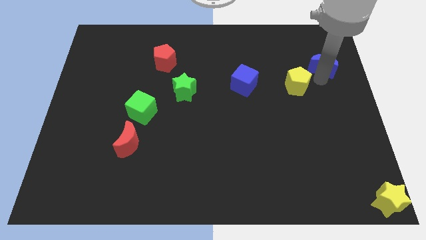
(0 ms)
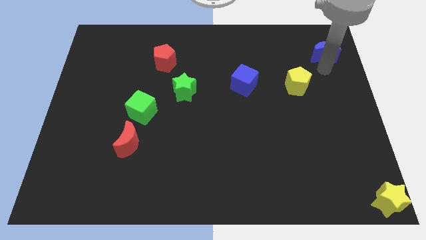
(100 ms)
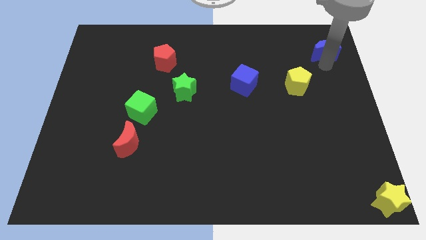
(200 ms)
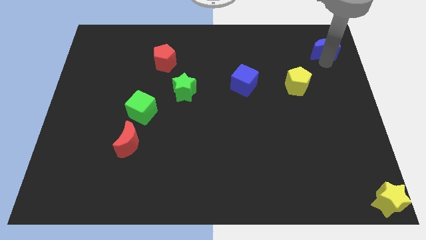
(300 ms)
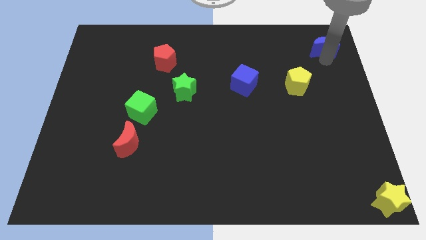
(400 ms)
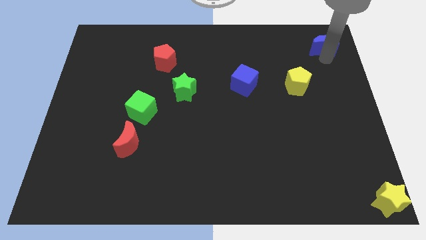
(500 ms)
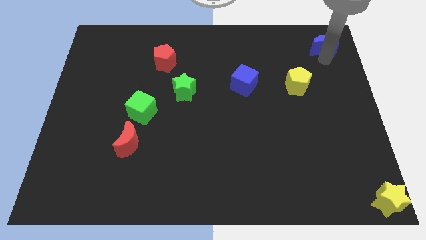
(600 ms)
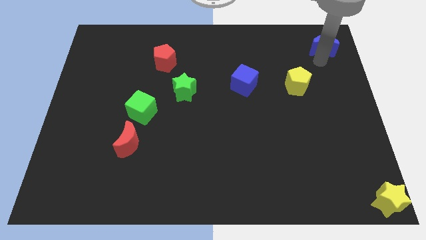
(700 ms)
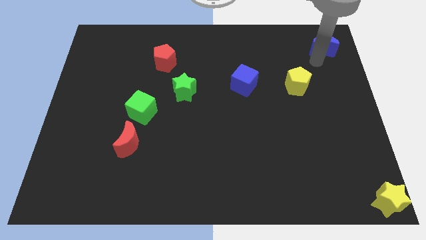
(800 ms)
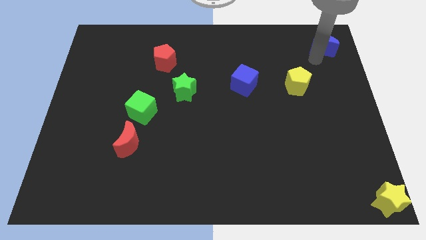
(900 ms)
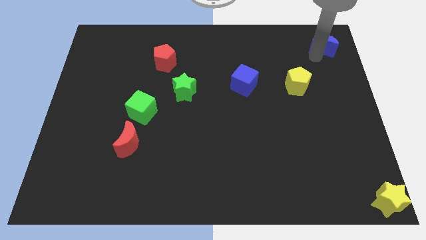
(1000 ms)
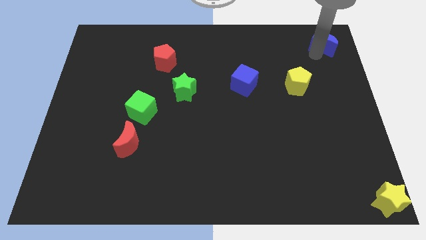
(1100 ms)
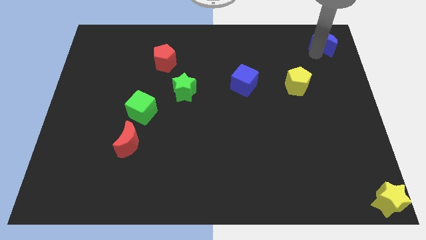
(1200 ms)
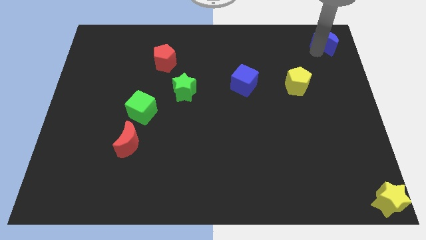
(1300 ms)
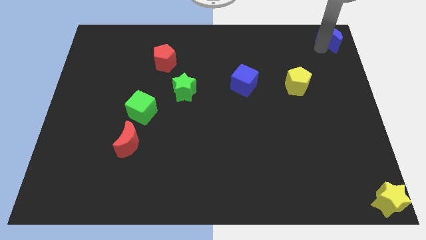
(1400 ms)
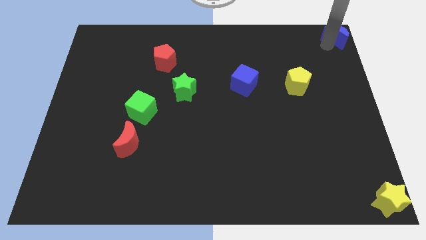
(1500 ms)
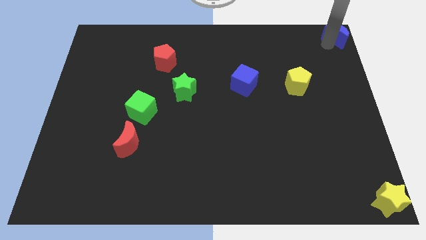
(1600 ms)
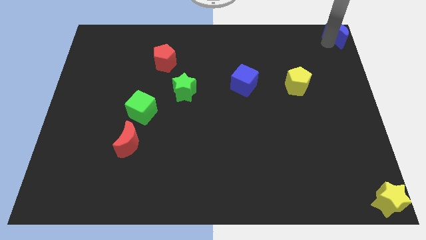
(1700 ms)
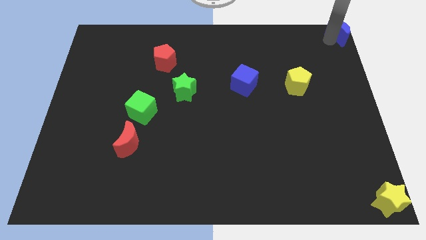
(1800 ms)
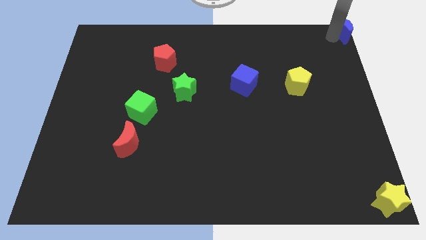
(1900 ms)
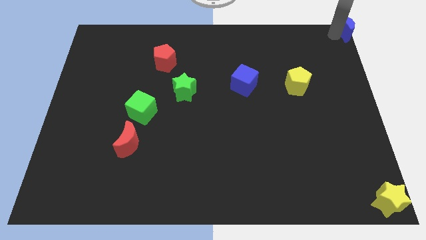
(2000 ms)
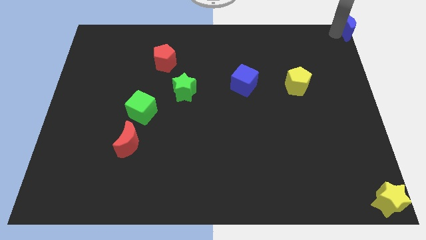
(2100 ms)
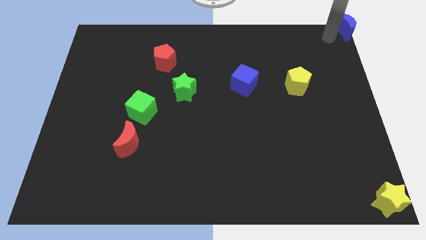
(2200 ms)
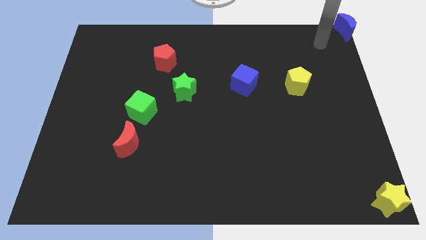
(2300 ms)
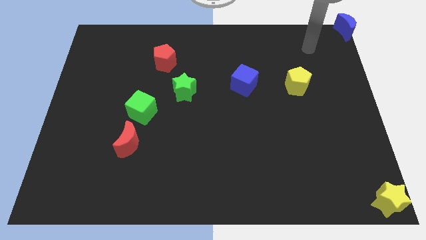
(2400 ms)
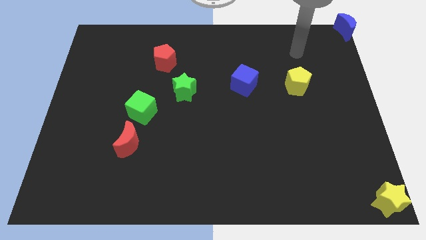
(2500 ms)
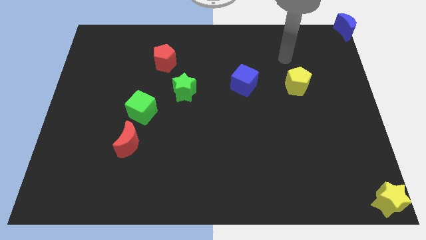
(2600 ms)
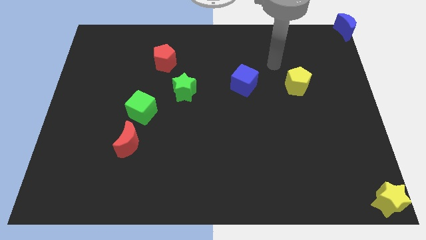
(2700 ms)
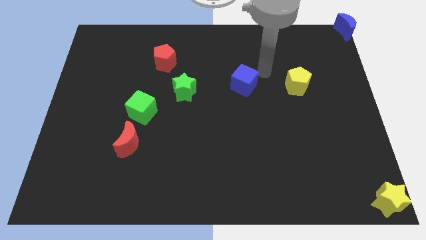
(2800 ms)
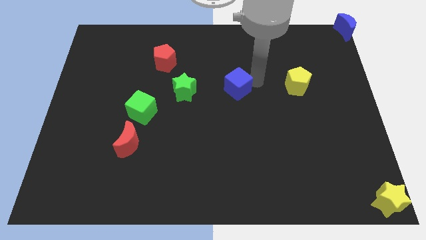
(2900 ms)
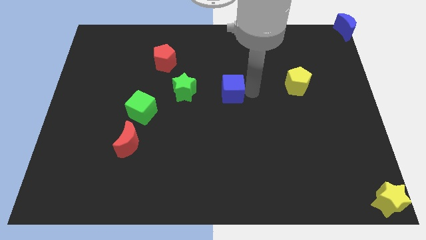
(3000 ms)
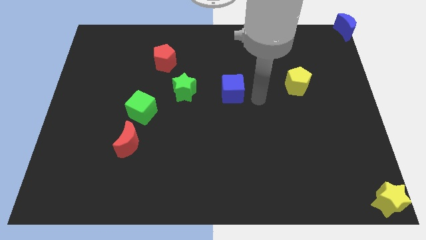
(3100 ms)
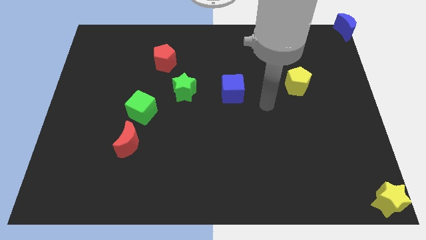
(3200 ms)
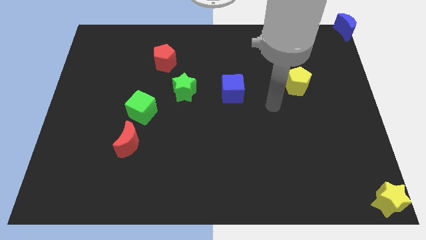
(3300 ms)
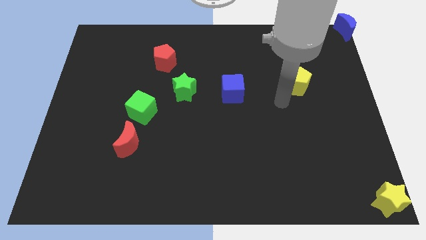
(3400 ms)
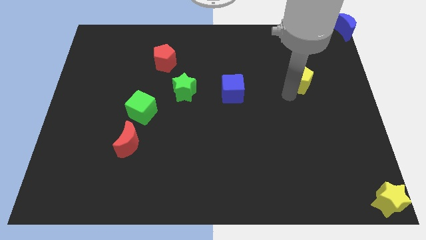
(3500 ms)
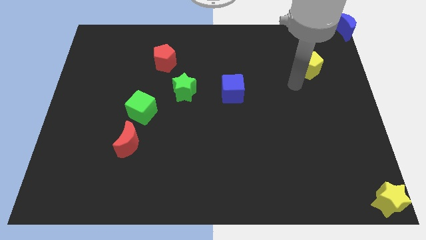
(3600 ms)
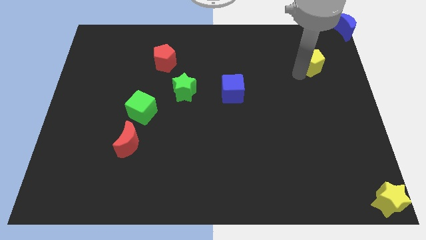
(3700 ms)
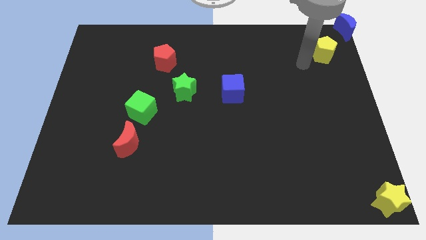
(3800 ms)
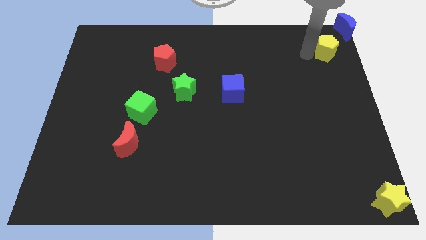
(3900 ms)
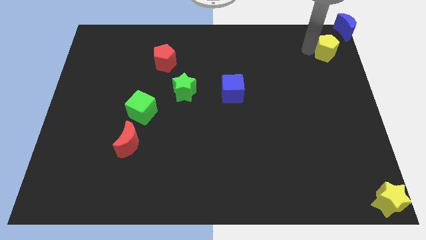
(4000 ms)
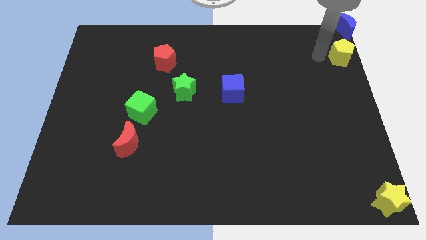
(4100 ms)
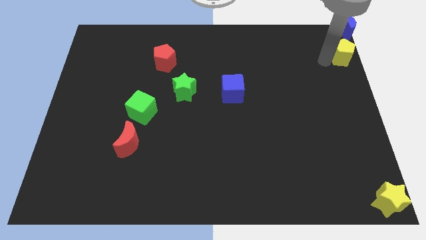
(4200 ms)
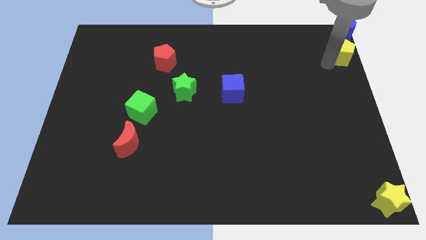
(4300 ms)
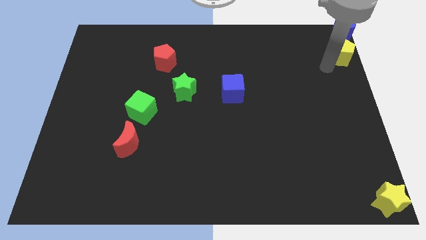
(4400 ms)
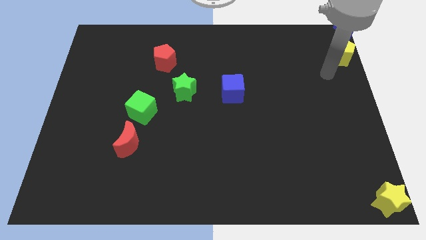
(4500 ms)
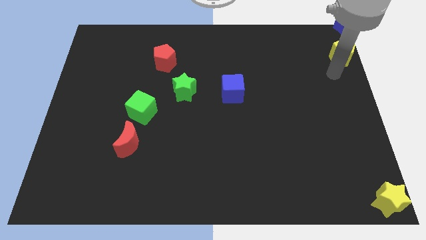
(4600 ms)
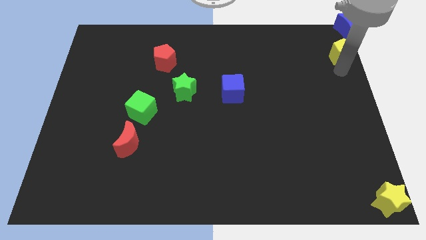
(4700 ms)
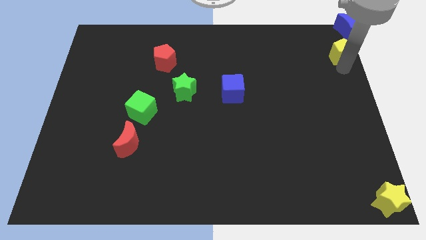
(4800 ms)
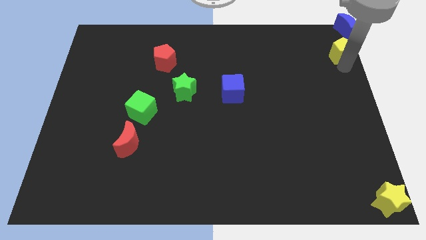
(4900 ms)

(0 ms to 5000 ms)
move the yellow pentagon below the blue moon

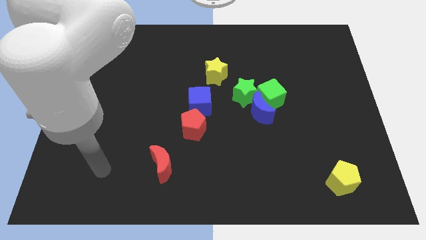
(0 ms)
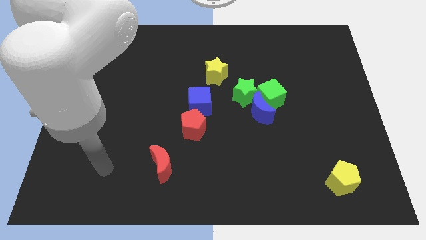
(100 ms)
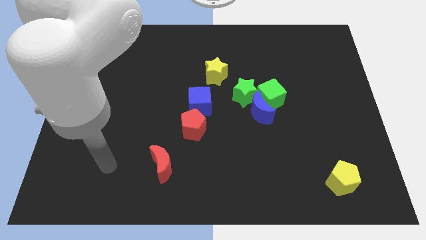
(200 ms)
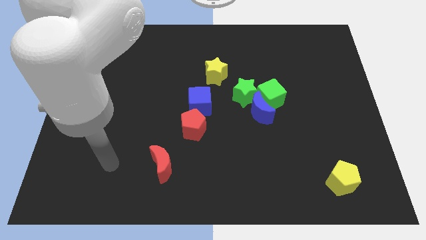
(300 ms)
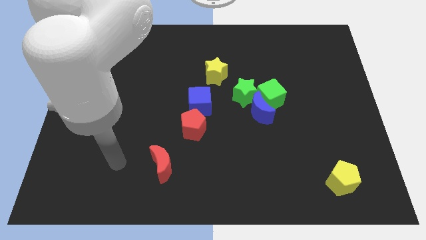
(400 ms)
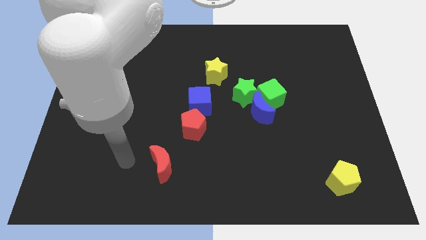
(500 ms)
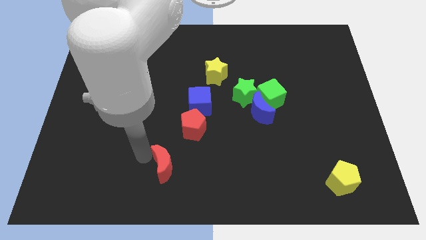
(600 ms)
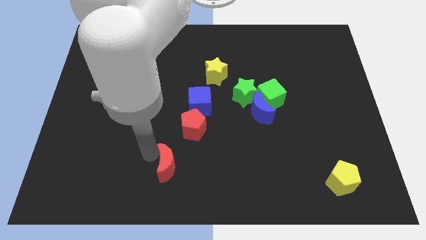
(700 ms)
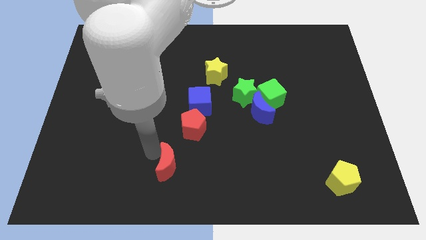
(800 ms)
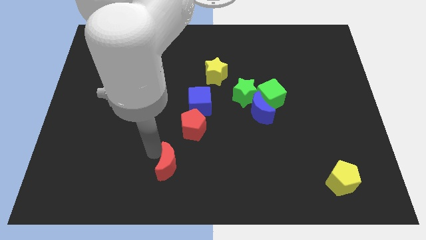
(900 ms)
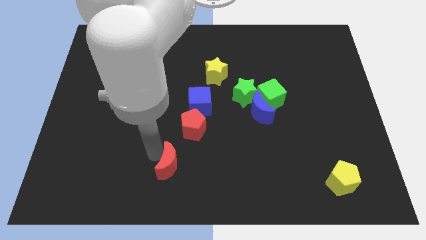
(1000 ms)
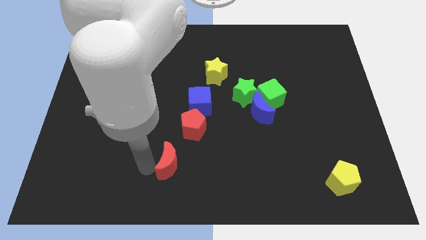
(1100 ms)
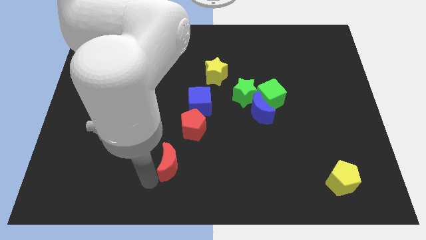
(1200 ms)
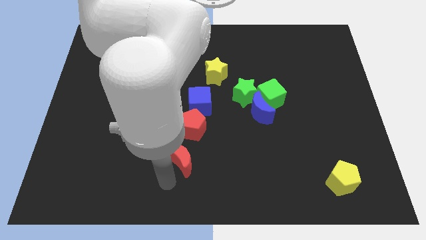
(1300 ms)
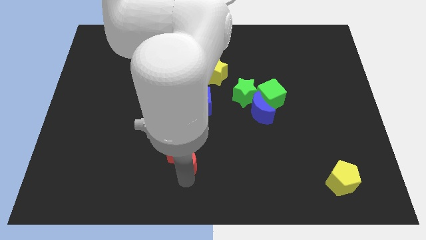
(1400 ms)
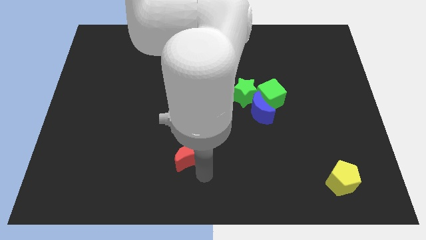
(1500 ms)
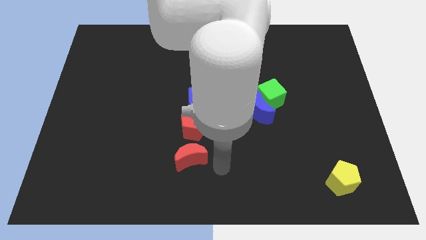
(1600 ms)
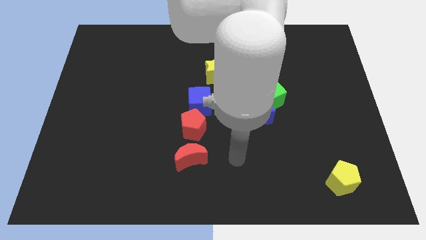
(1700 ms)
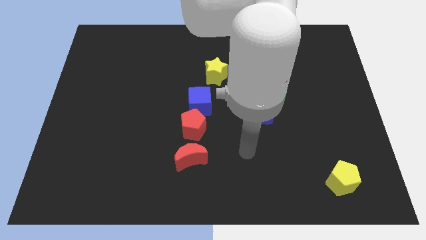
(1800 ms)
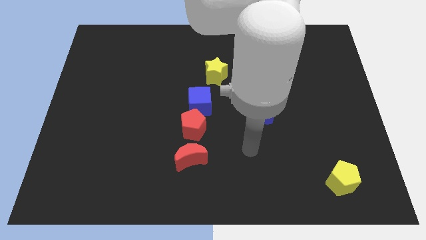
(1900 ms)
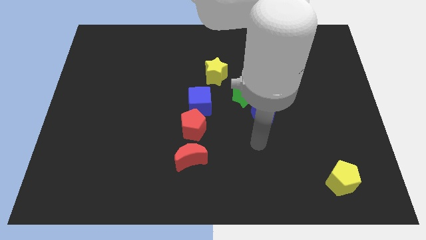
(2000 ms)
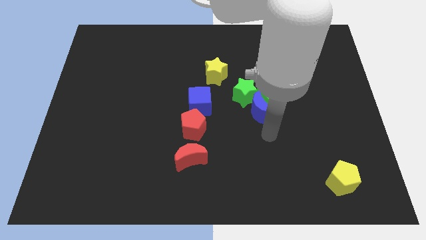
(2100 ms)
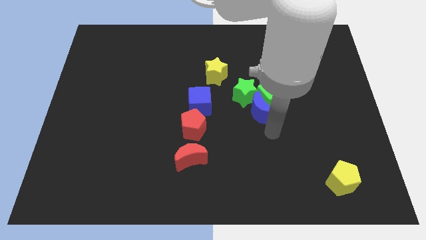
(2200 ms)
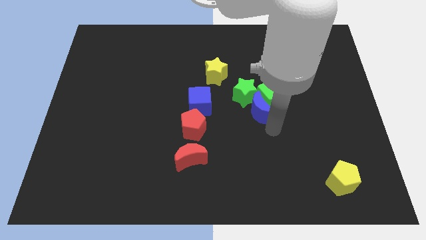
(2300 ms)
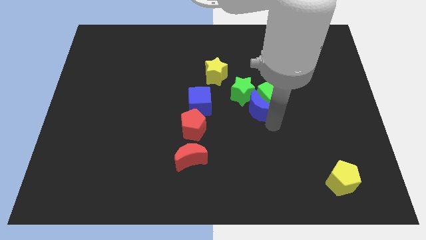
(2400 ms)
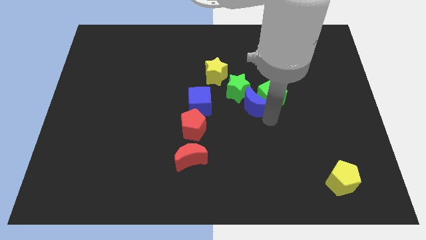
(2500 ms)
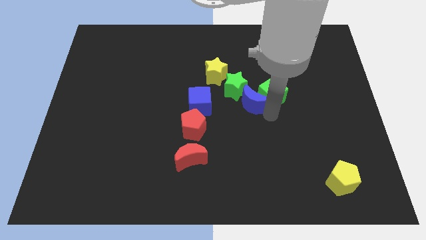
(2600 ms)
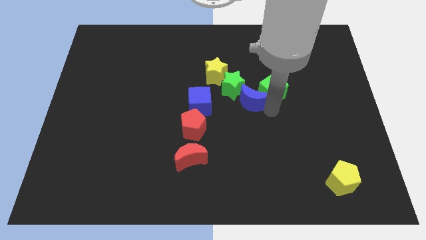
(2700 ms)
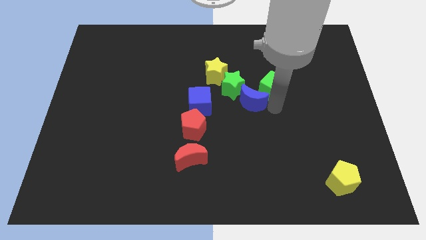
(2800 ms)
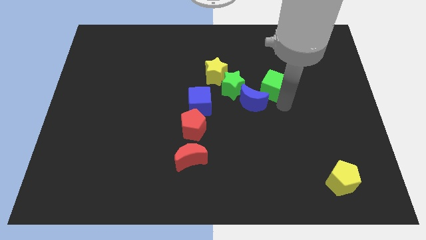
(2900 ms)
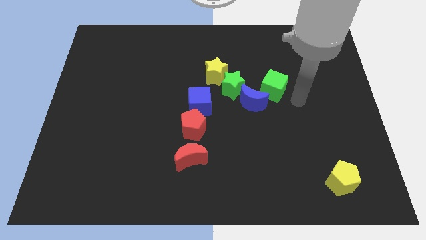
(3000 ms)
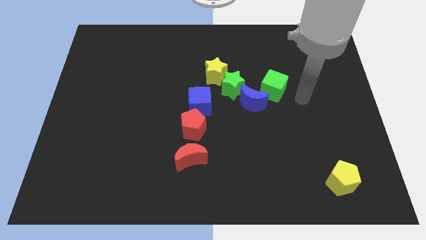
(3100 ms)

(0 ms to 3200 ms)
push blue moon towards red pentagon

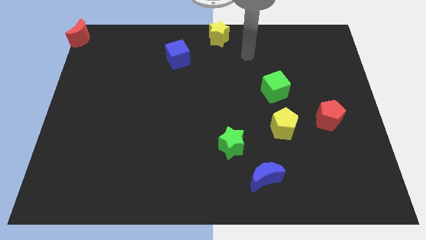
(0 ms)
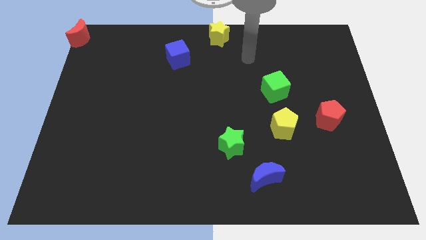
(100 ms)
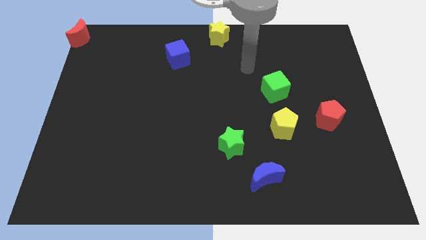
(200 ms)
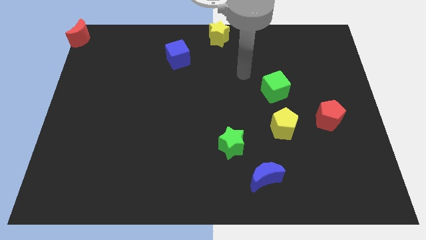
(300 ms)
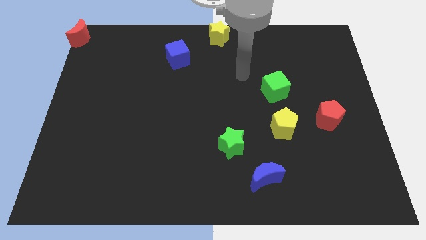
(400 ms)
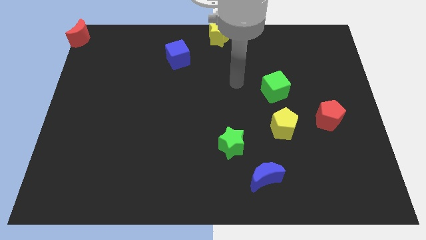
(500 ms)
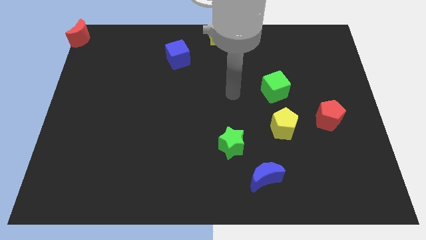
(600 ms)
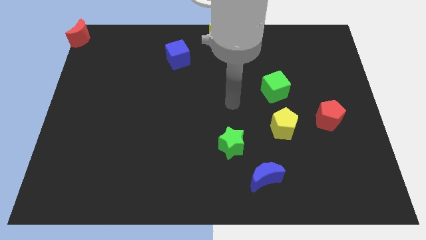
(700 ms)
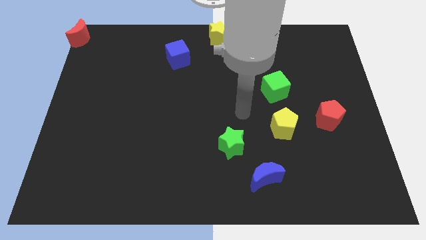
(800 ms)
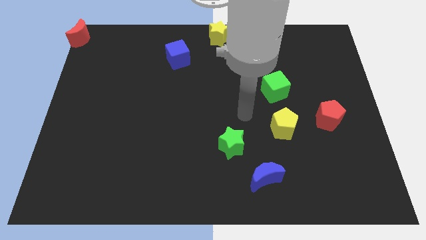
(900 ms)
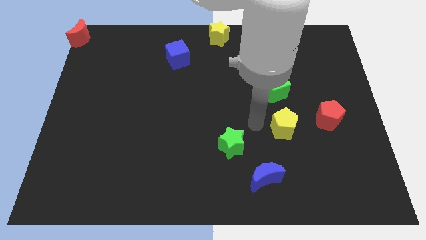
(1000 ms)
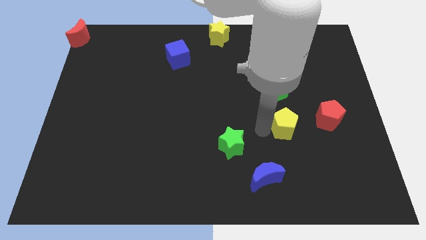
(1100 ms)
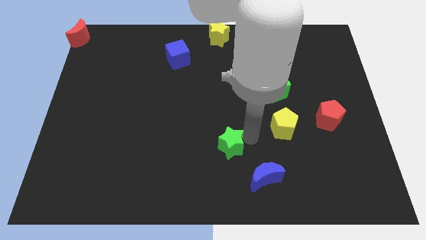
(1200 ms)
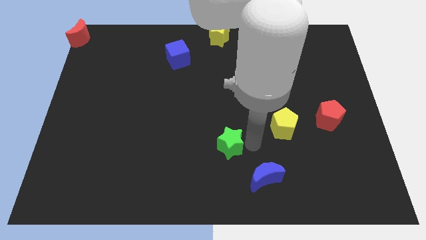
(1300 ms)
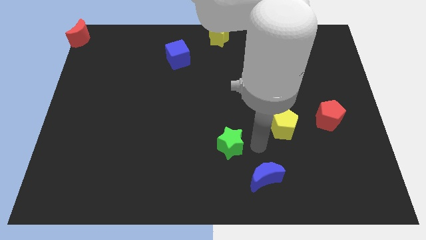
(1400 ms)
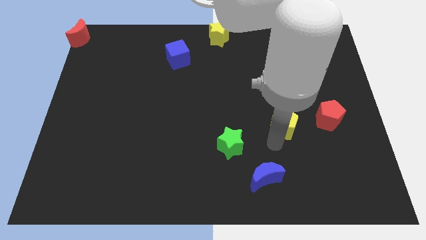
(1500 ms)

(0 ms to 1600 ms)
place your arm to the bottom side of the yellow pentagon
